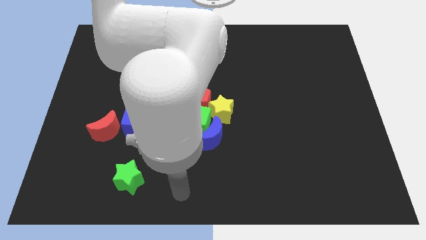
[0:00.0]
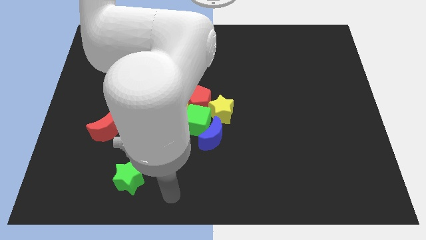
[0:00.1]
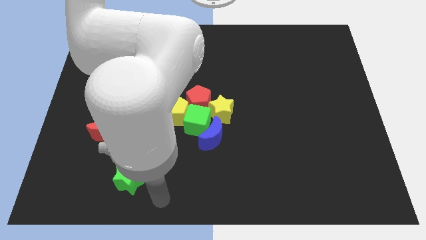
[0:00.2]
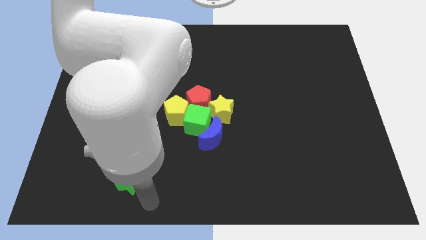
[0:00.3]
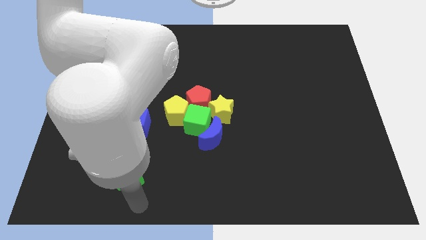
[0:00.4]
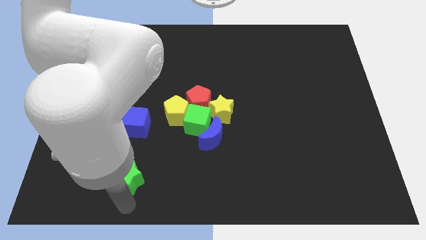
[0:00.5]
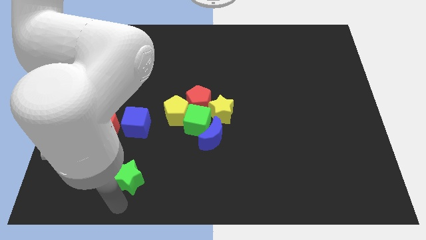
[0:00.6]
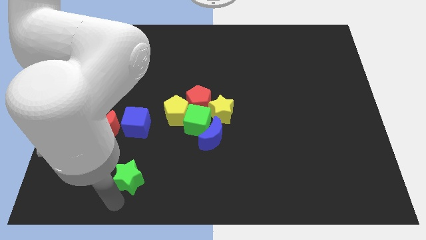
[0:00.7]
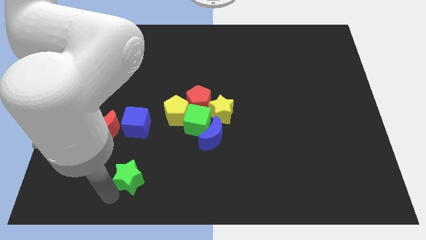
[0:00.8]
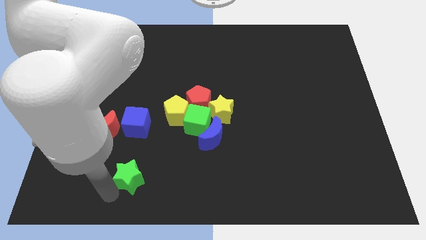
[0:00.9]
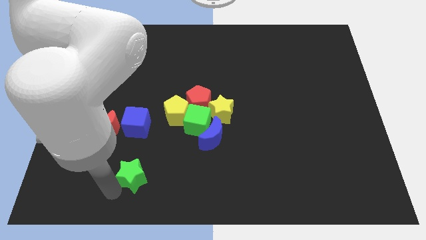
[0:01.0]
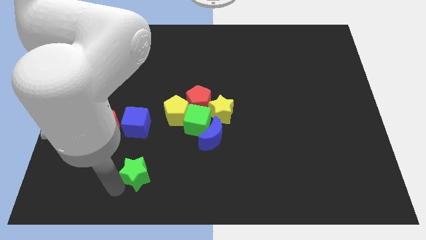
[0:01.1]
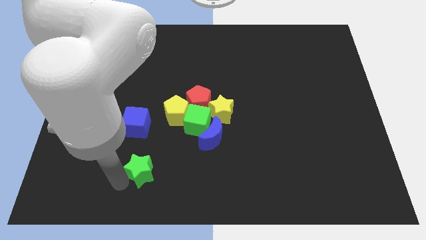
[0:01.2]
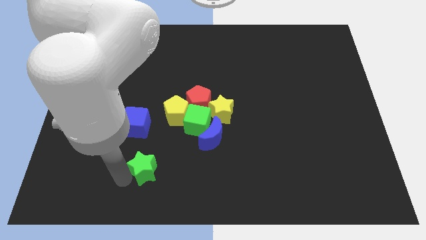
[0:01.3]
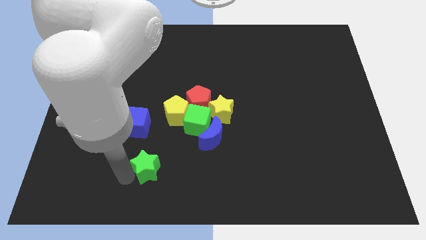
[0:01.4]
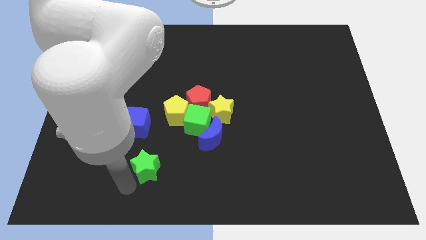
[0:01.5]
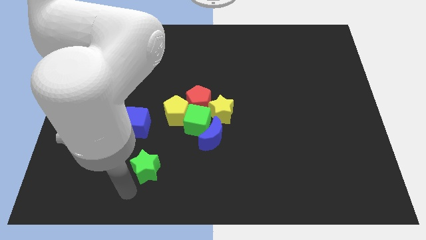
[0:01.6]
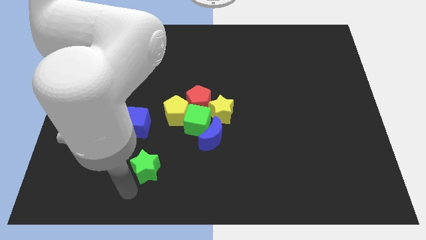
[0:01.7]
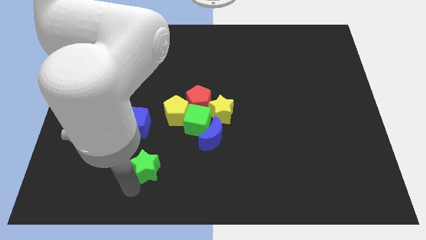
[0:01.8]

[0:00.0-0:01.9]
push the green star towards the top

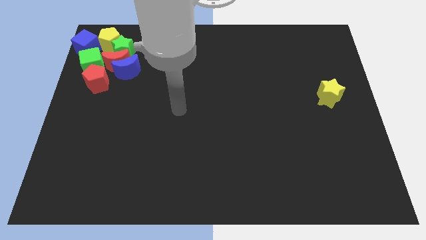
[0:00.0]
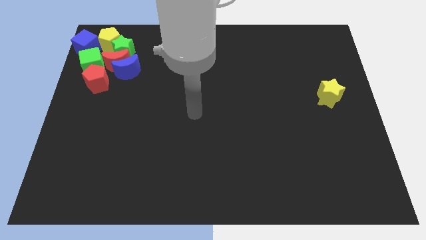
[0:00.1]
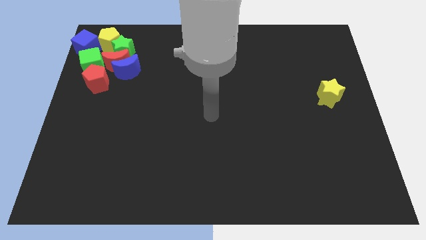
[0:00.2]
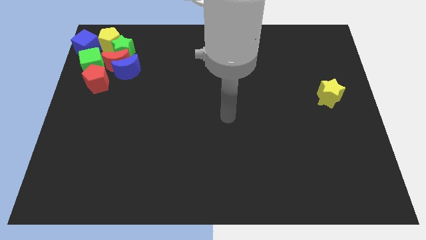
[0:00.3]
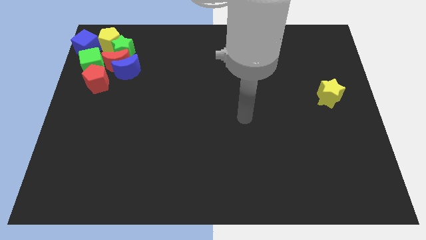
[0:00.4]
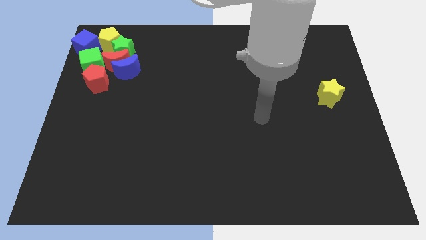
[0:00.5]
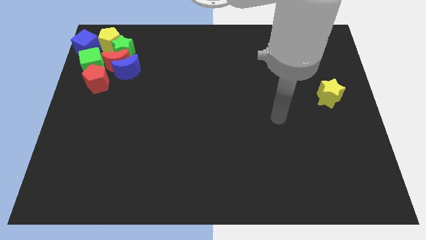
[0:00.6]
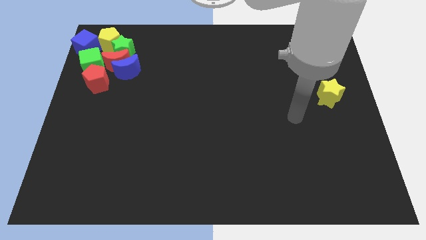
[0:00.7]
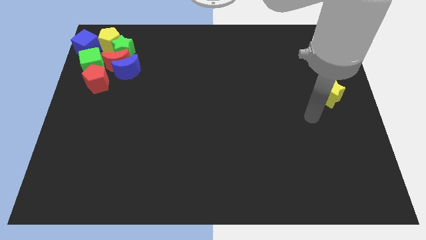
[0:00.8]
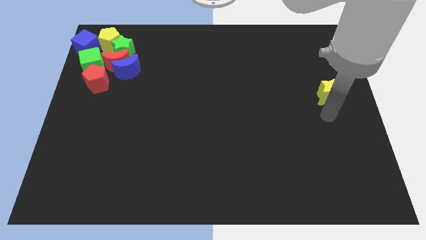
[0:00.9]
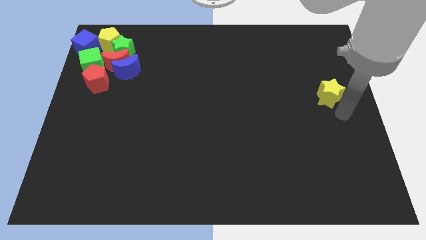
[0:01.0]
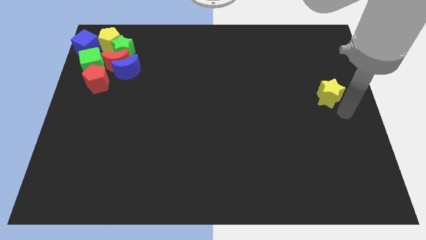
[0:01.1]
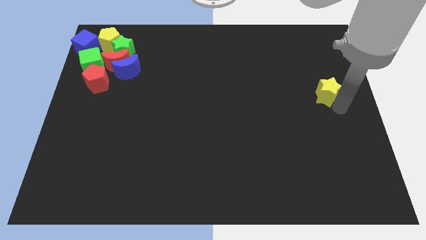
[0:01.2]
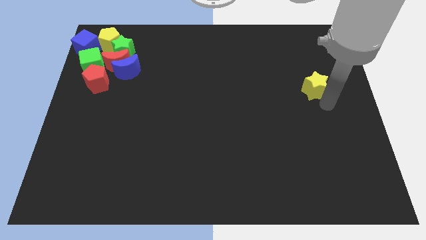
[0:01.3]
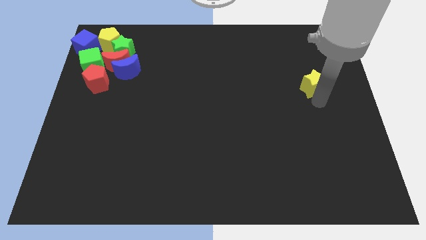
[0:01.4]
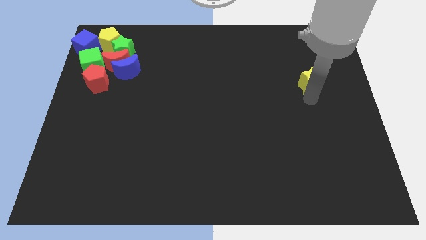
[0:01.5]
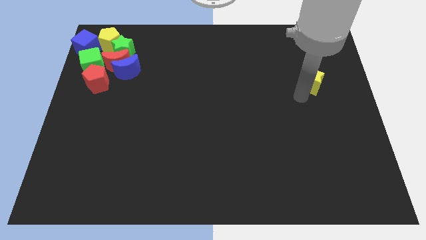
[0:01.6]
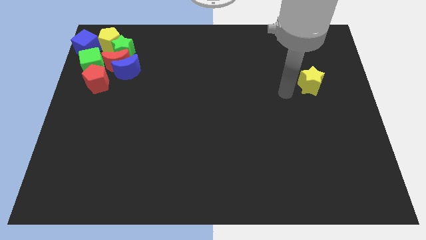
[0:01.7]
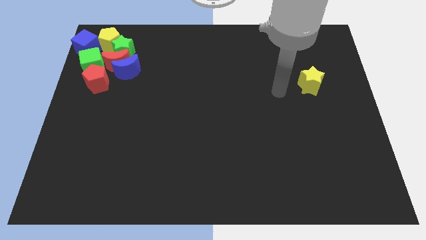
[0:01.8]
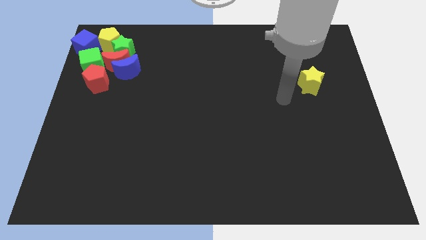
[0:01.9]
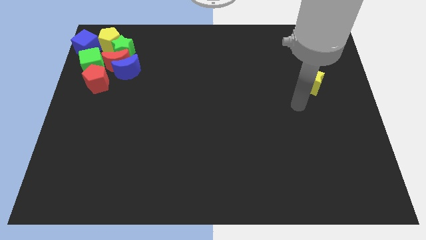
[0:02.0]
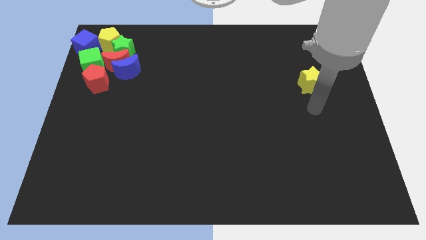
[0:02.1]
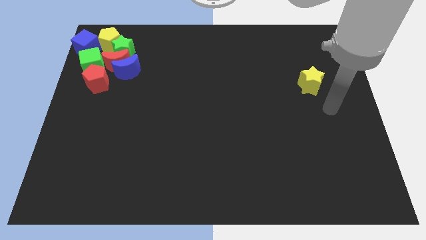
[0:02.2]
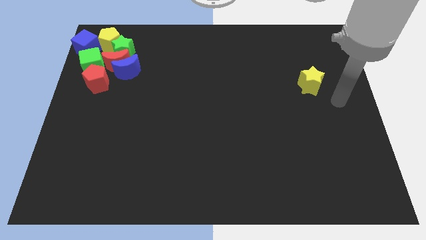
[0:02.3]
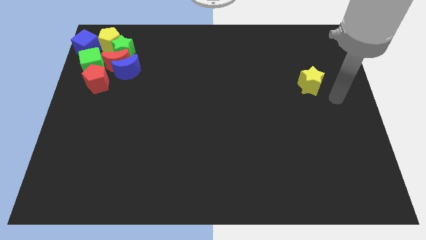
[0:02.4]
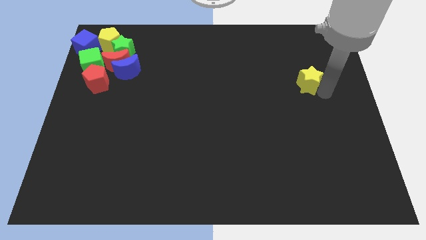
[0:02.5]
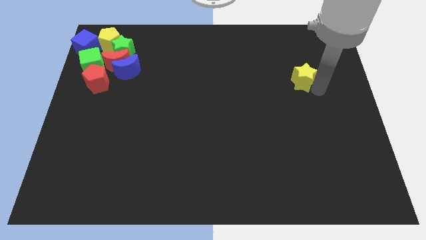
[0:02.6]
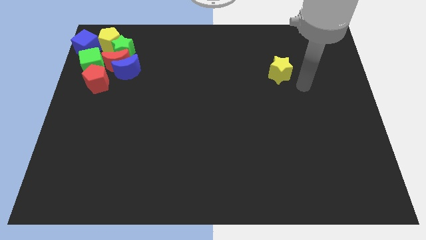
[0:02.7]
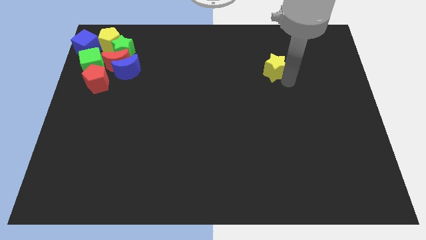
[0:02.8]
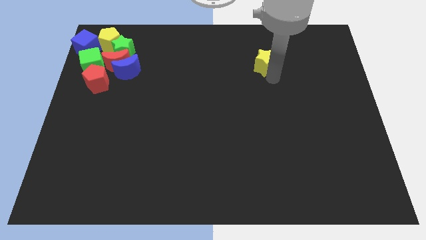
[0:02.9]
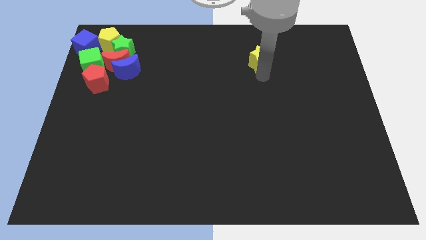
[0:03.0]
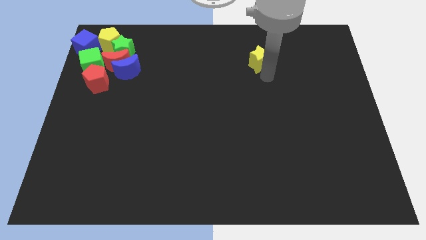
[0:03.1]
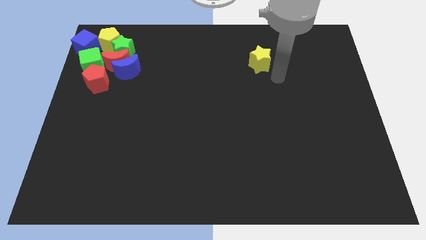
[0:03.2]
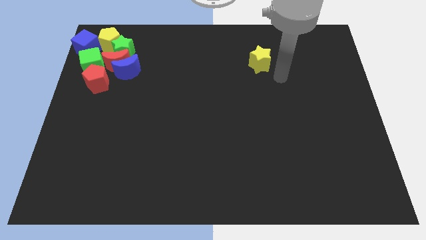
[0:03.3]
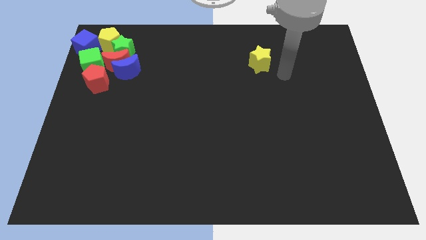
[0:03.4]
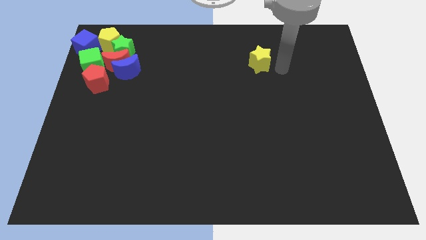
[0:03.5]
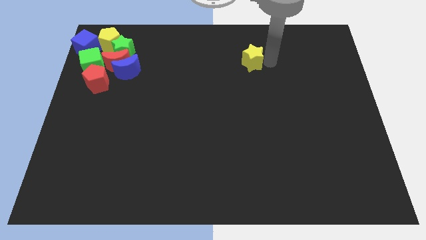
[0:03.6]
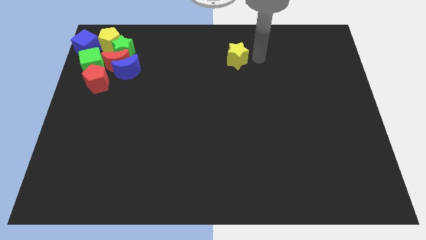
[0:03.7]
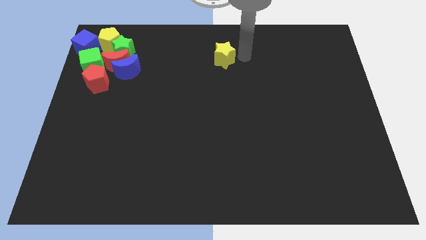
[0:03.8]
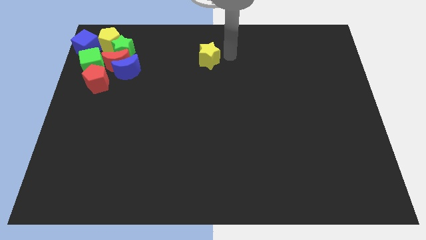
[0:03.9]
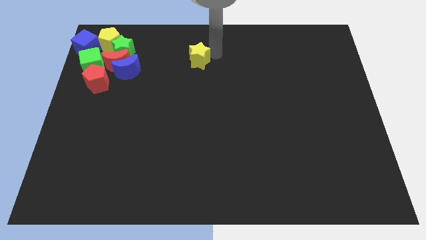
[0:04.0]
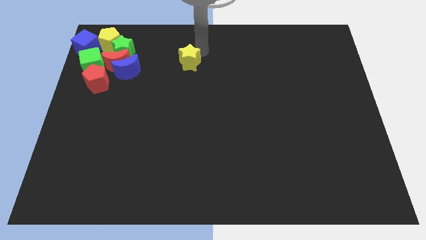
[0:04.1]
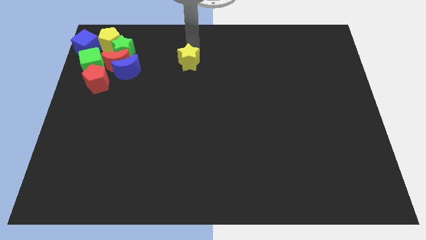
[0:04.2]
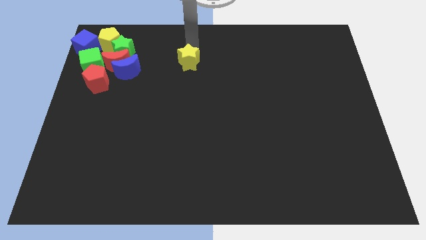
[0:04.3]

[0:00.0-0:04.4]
push the yellow star towards the right side of the group of blocks

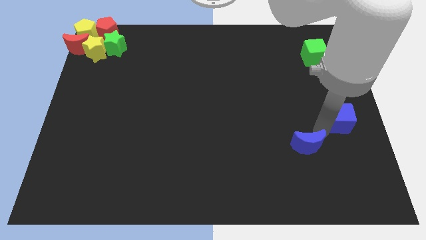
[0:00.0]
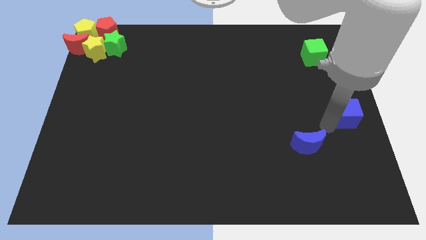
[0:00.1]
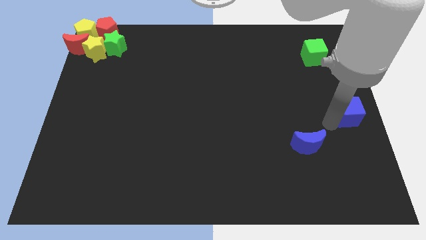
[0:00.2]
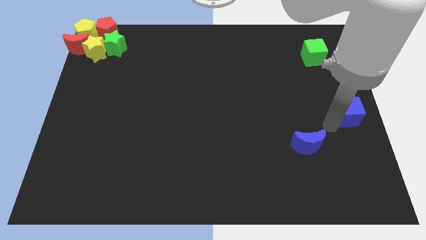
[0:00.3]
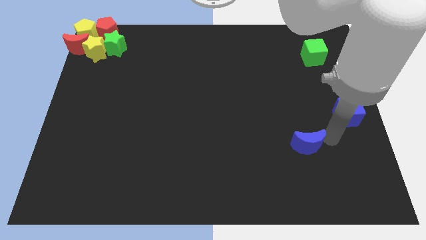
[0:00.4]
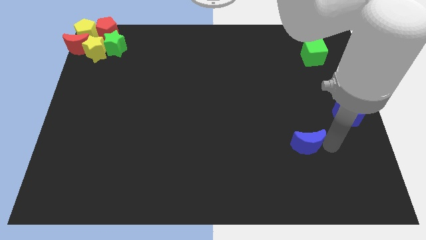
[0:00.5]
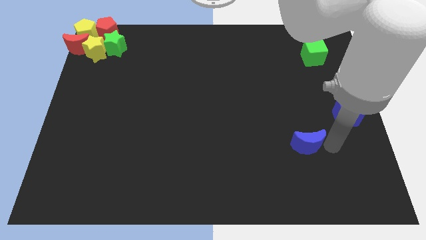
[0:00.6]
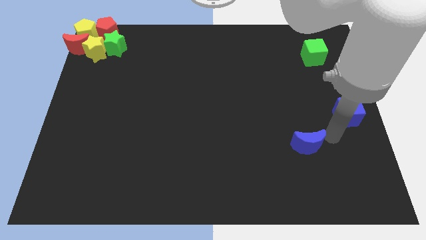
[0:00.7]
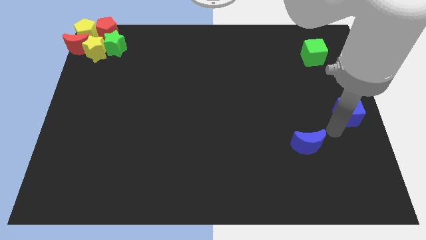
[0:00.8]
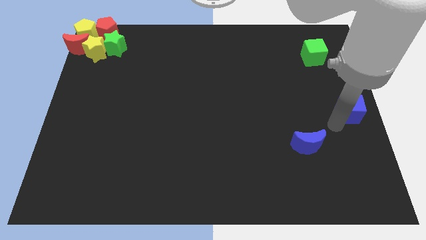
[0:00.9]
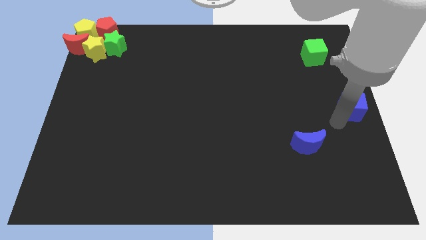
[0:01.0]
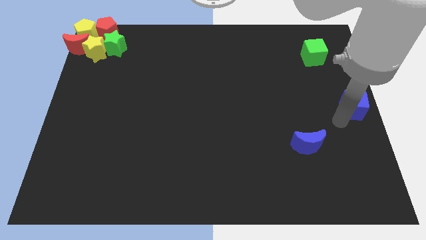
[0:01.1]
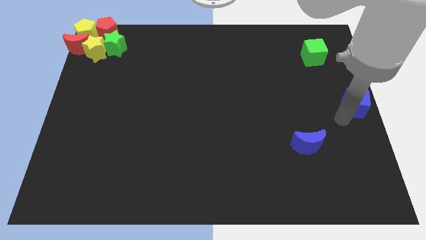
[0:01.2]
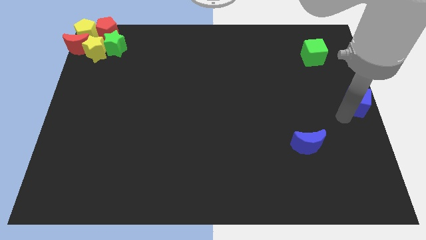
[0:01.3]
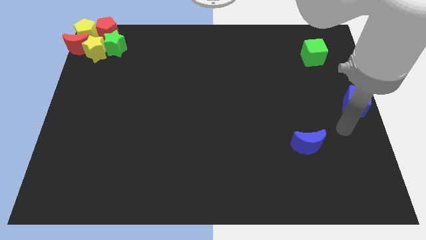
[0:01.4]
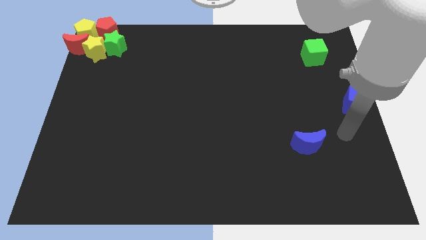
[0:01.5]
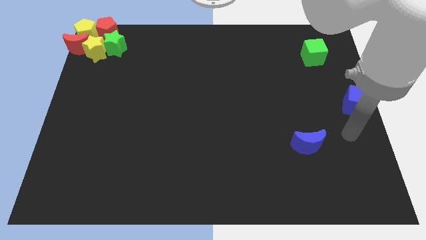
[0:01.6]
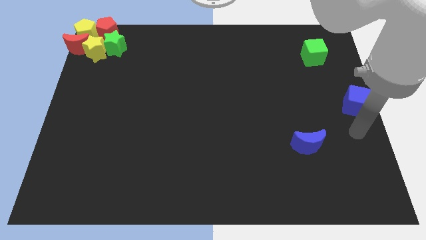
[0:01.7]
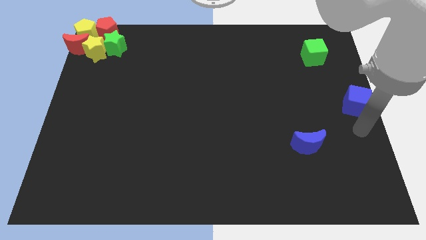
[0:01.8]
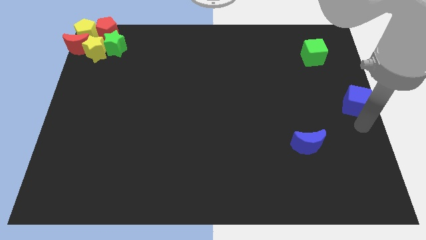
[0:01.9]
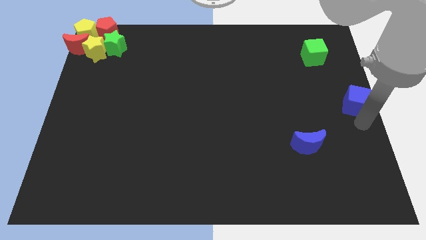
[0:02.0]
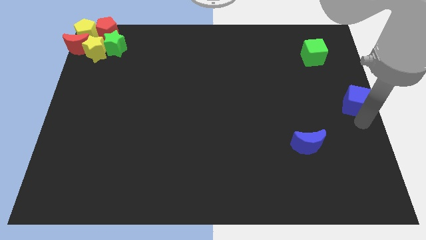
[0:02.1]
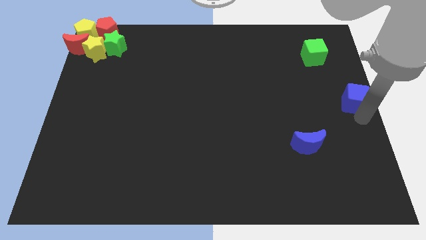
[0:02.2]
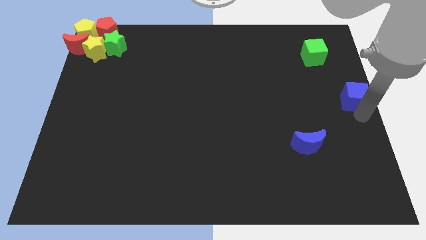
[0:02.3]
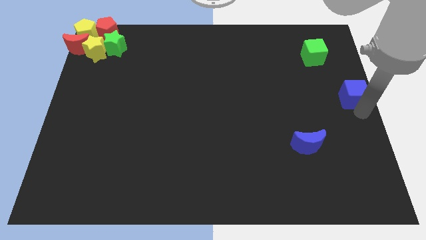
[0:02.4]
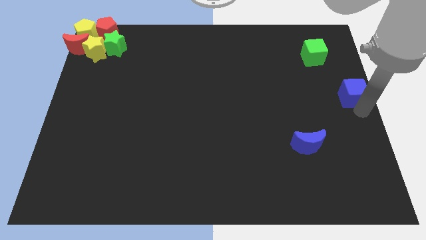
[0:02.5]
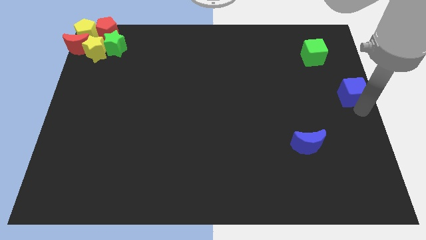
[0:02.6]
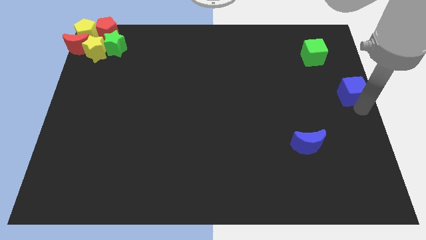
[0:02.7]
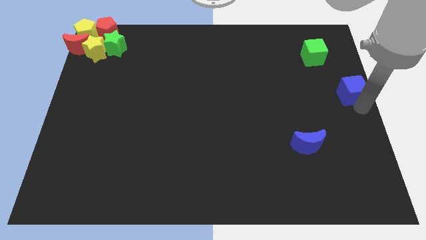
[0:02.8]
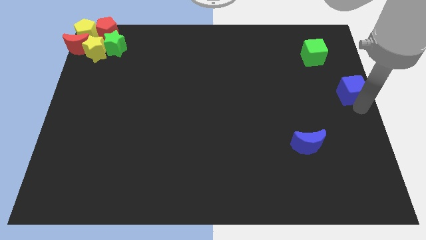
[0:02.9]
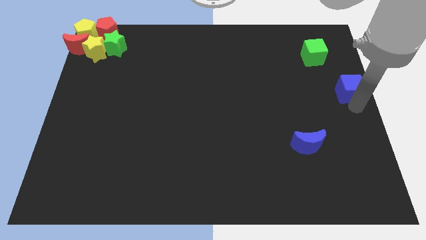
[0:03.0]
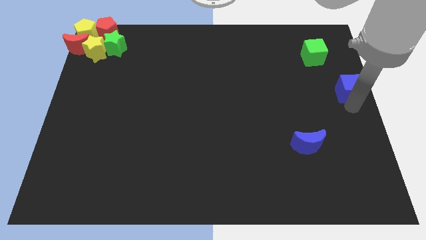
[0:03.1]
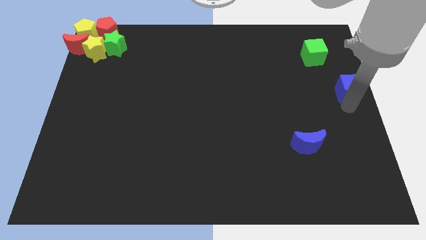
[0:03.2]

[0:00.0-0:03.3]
push the blue cube to the center right of the board
